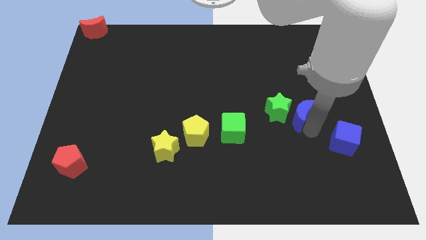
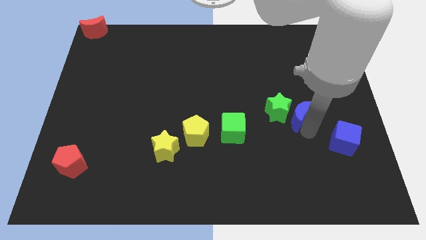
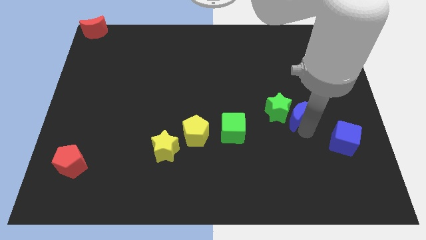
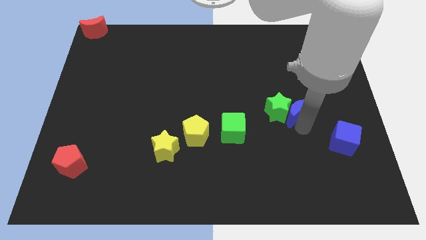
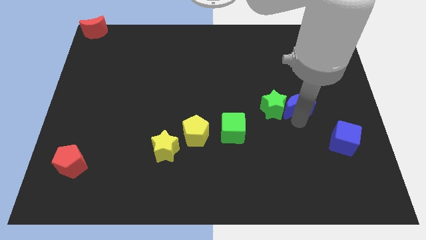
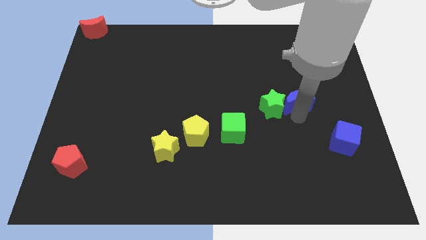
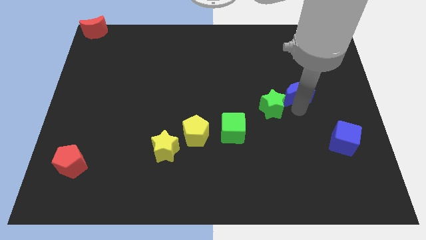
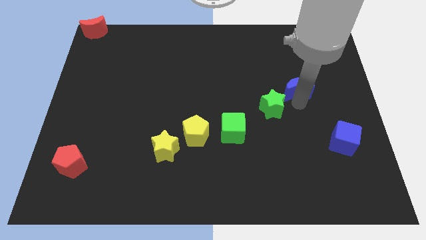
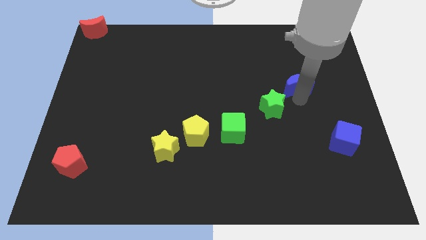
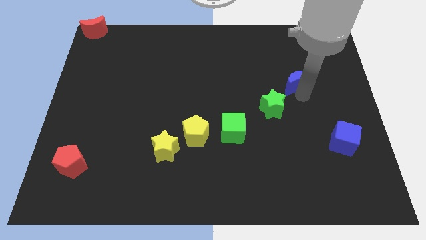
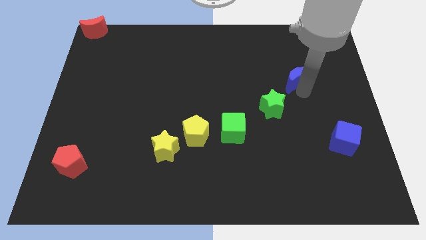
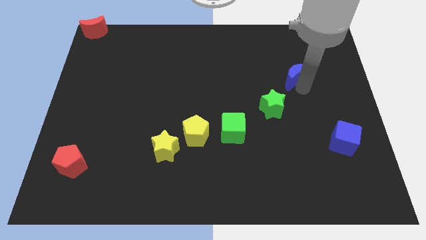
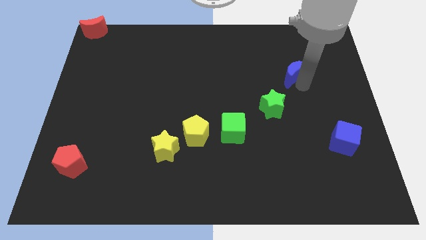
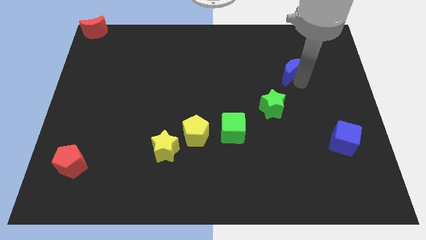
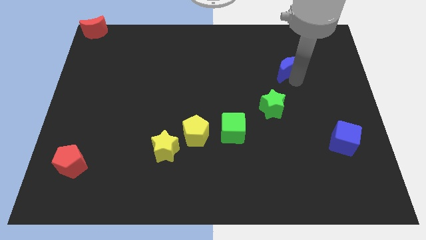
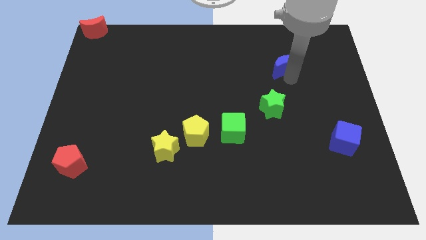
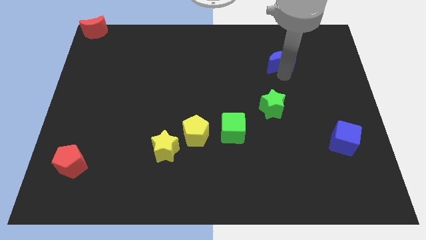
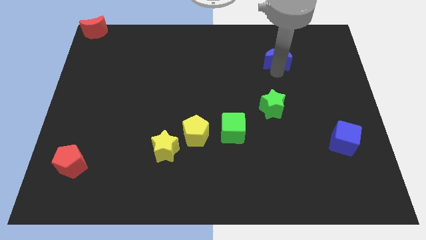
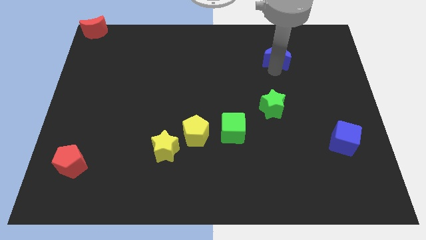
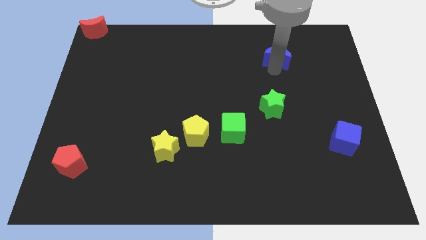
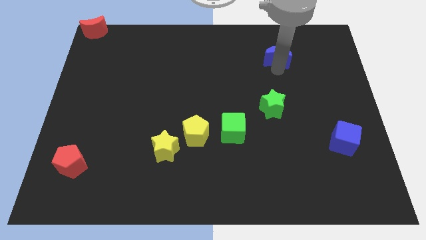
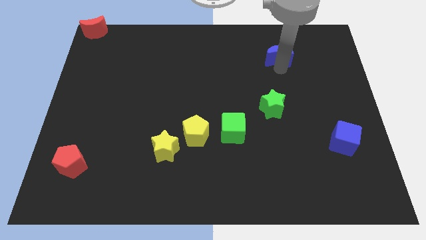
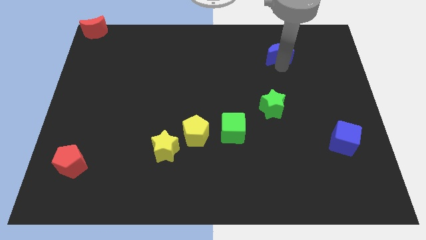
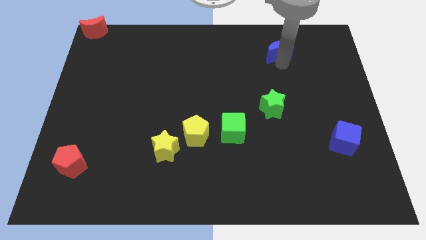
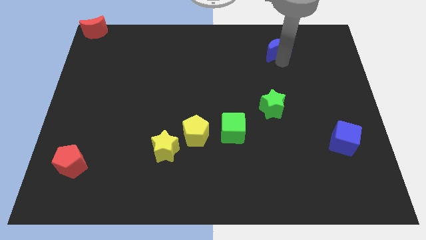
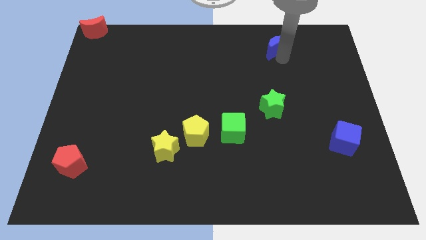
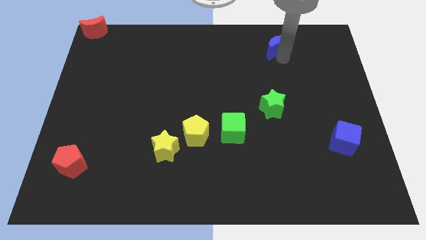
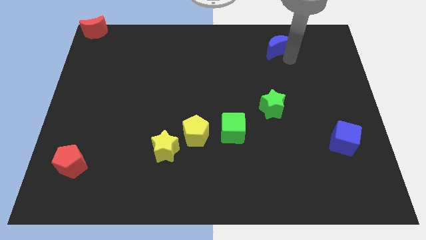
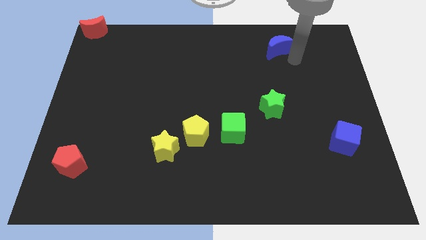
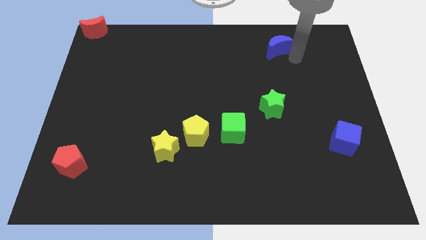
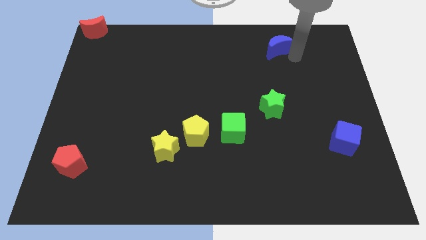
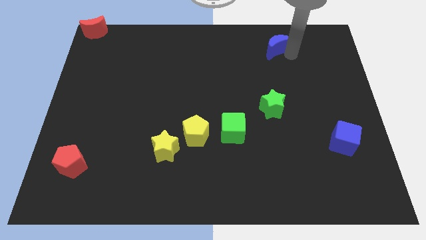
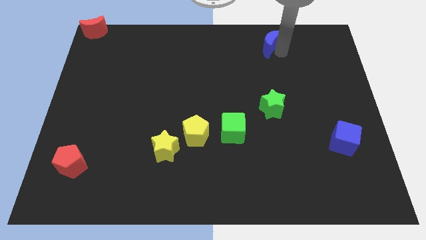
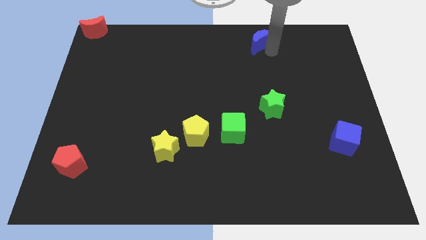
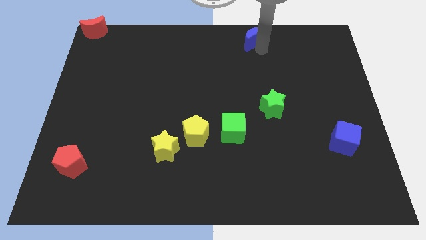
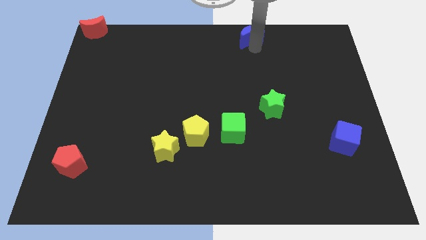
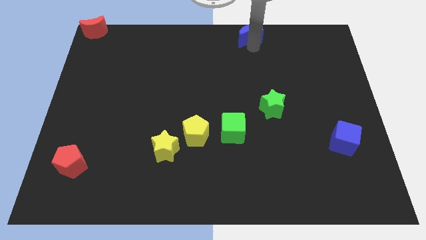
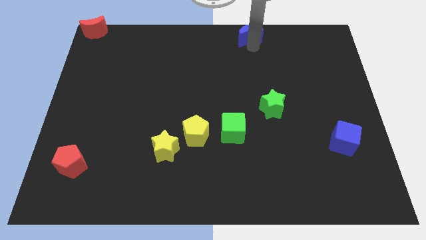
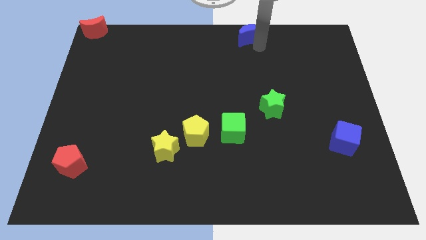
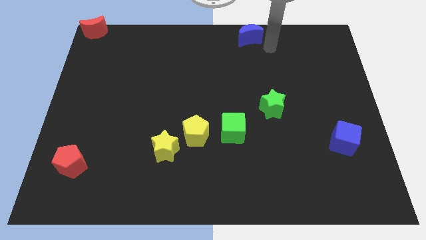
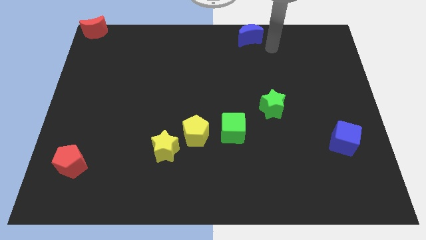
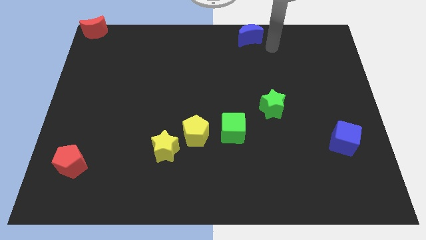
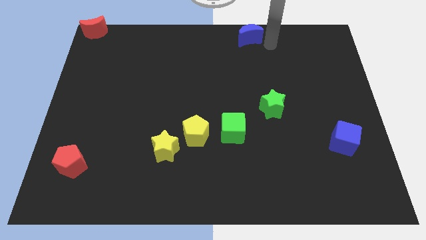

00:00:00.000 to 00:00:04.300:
push blue moon towards top middle of the board

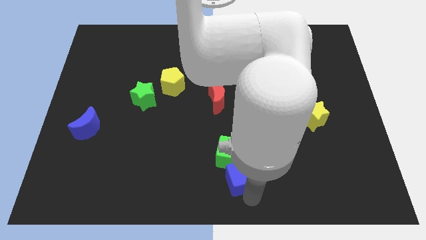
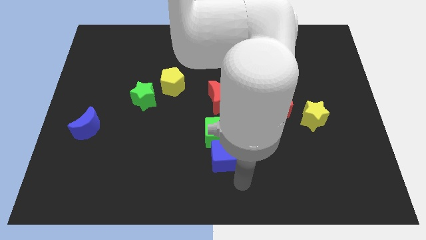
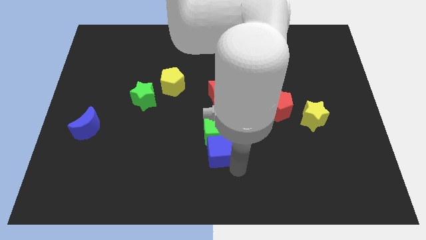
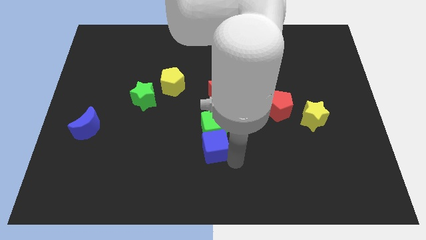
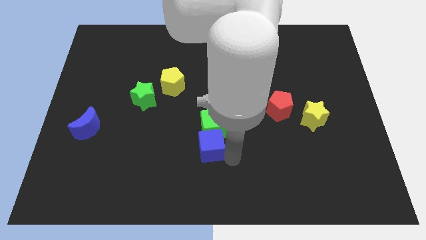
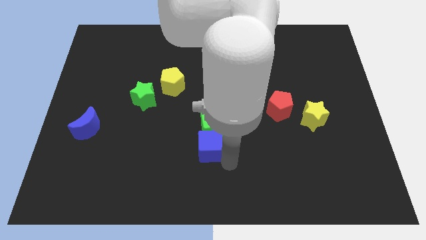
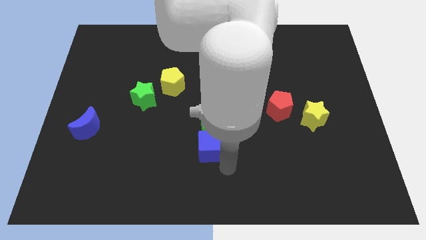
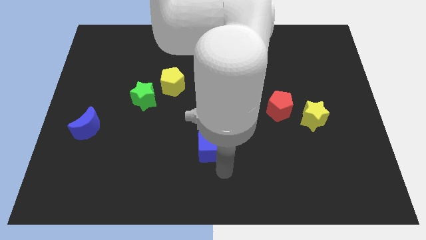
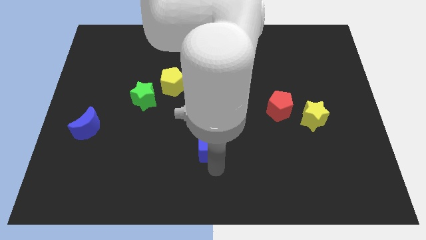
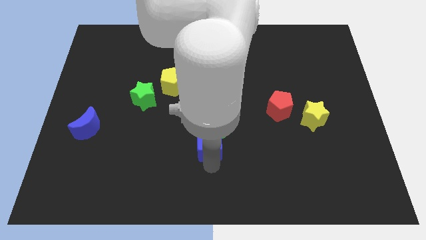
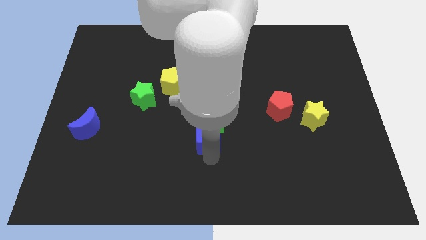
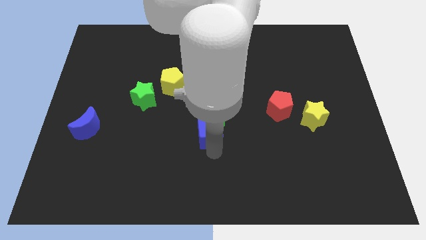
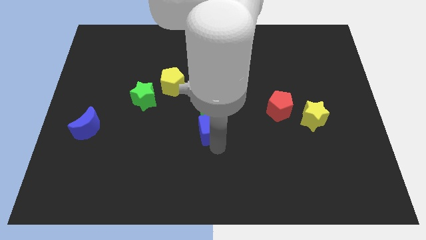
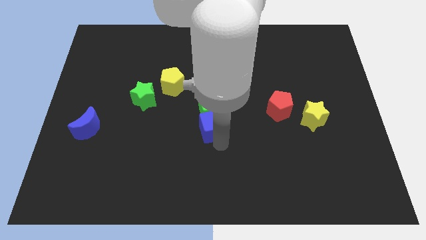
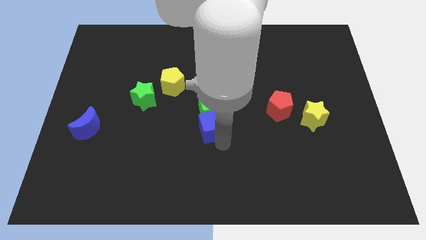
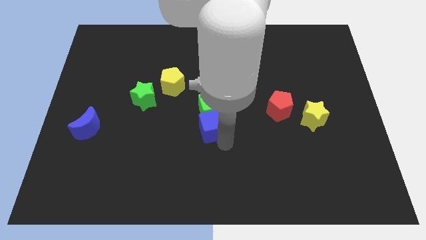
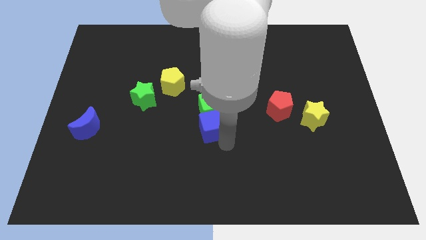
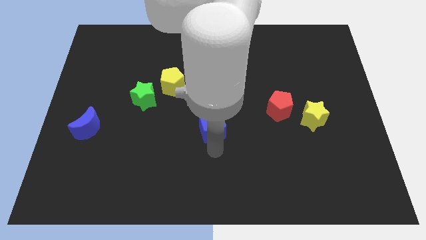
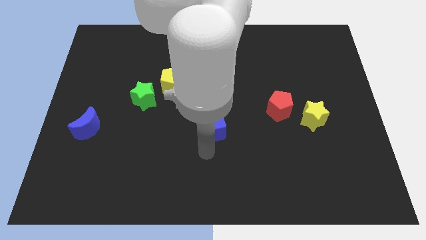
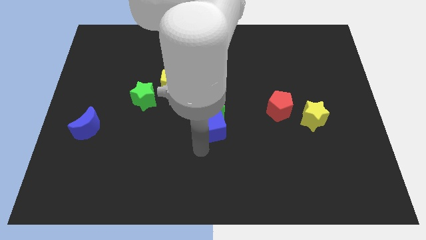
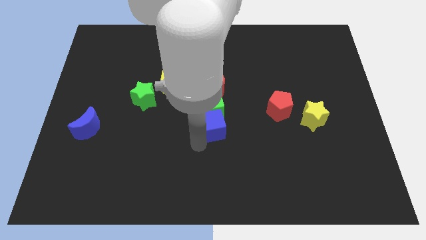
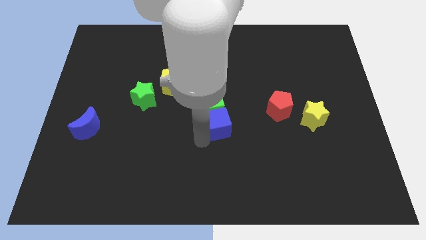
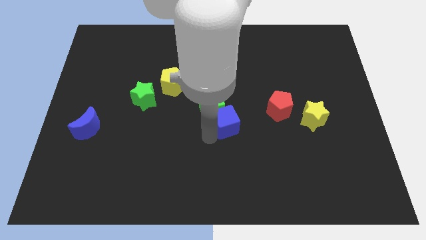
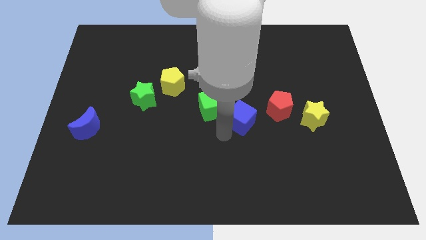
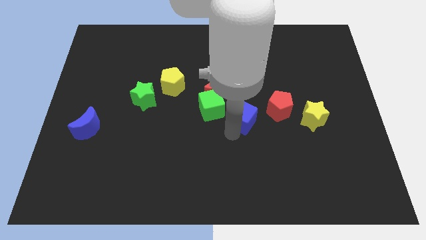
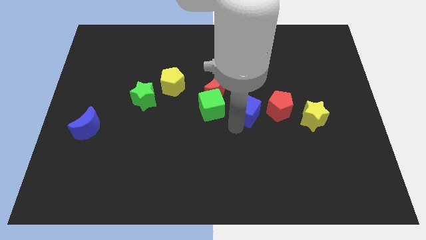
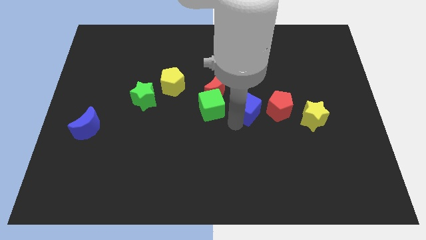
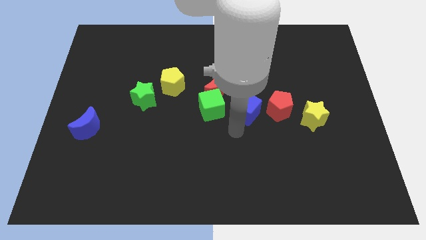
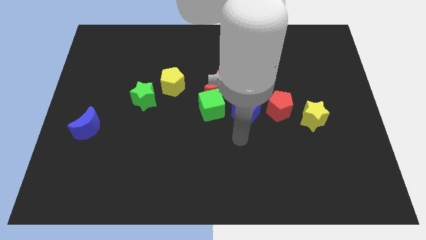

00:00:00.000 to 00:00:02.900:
push the blue cube towards the right of green cube

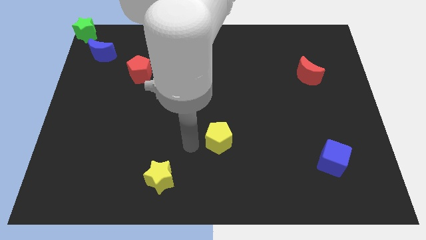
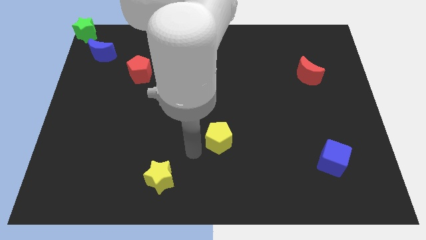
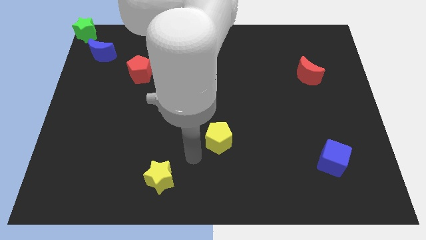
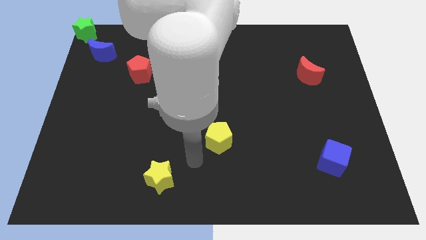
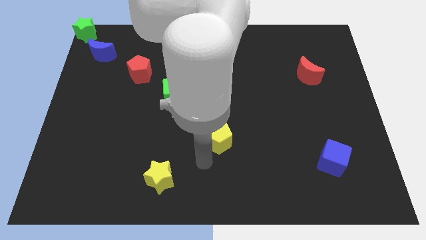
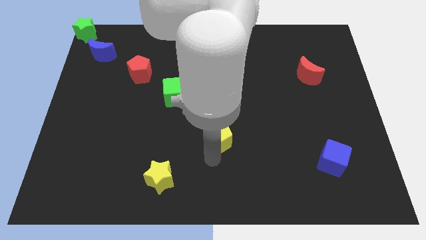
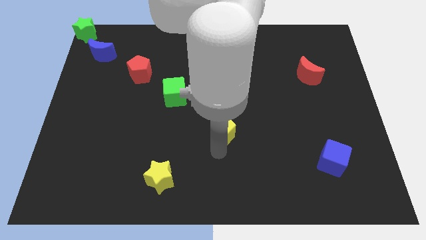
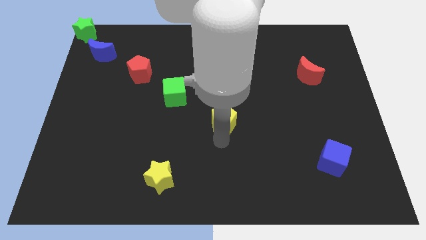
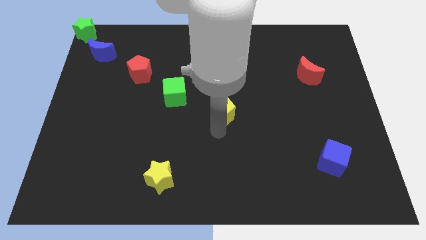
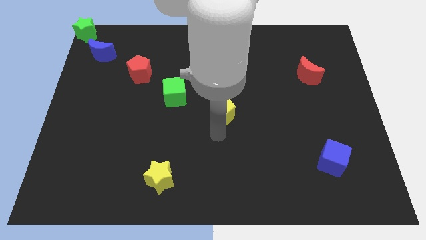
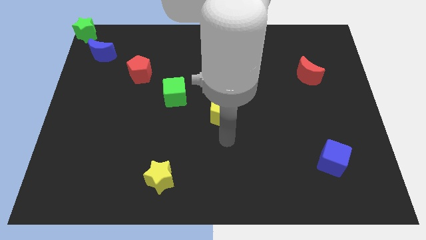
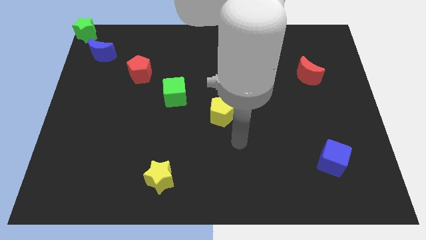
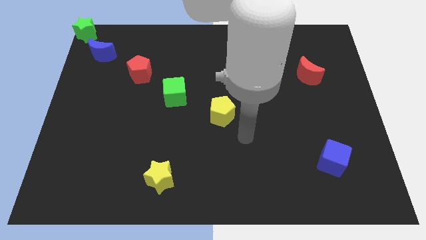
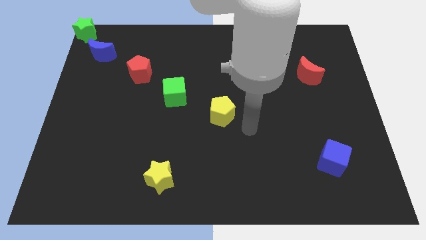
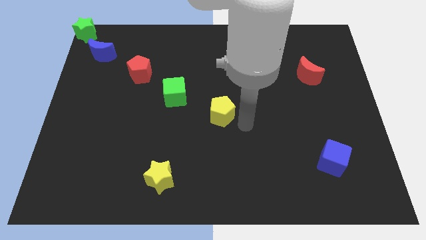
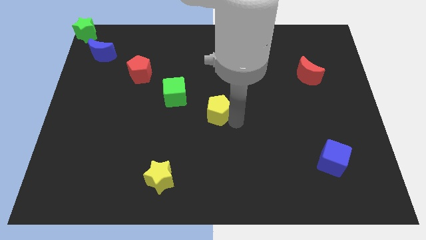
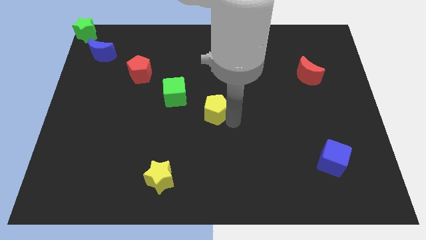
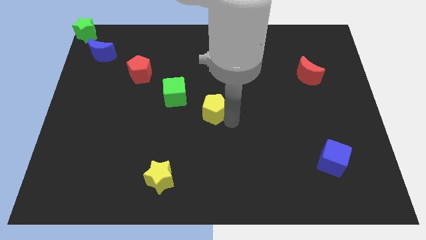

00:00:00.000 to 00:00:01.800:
place the yellow pentagon in the center

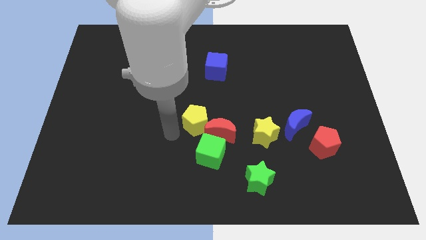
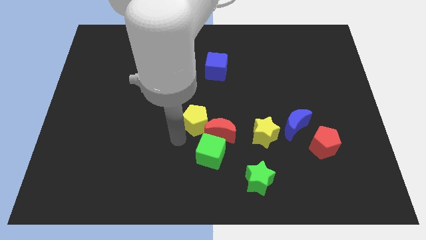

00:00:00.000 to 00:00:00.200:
place the yellow pentagon on the top left side of the red crescent
